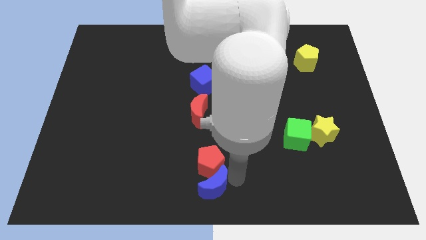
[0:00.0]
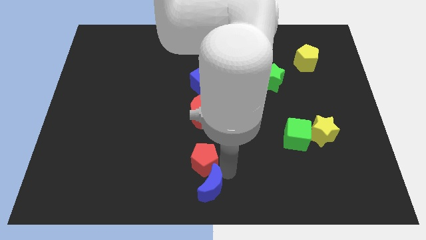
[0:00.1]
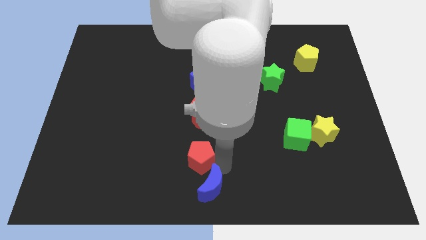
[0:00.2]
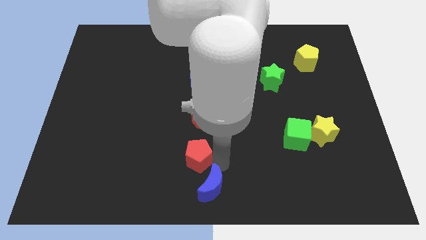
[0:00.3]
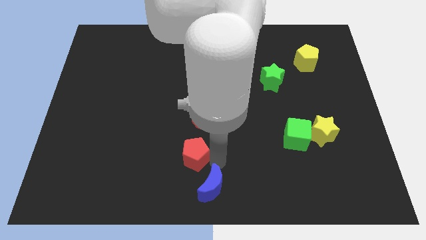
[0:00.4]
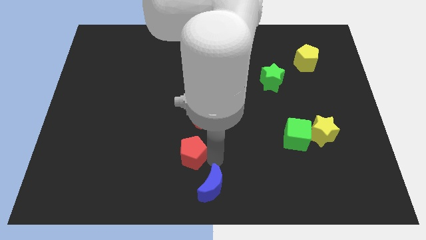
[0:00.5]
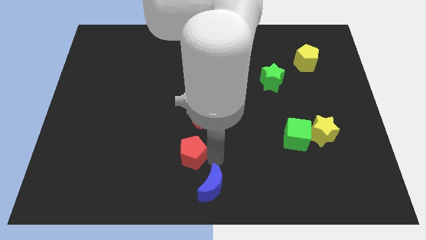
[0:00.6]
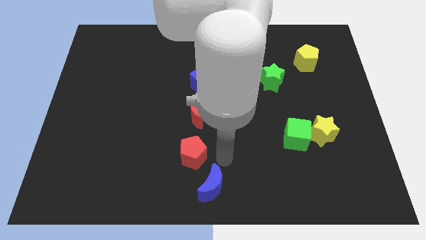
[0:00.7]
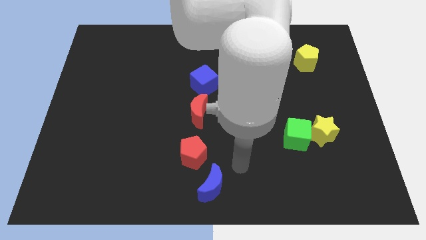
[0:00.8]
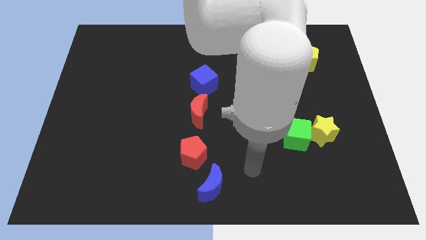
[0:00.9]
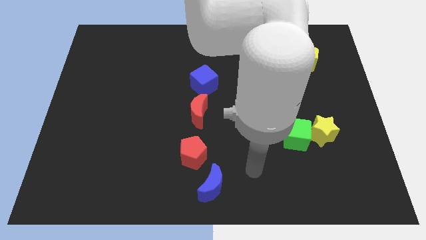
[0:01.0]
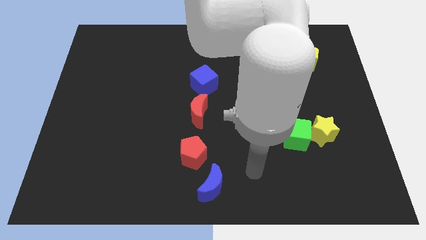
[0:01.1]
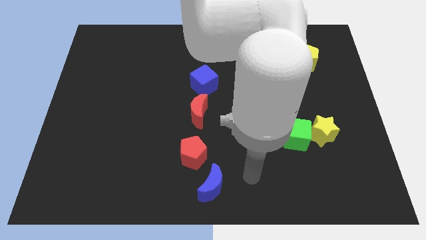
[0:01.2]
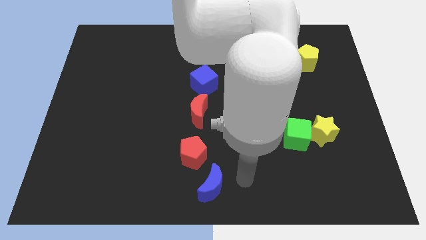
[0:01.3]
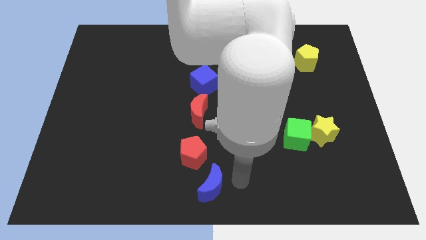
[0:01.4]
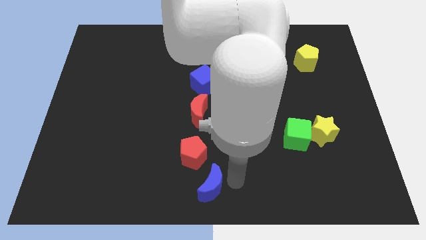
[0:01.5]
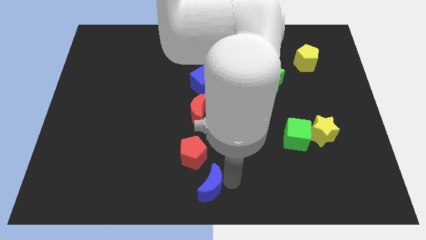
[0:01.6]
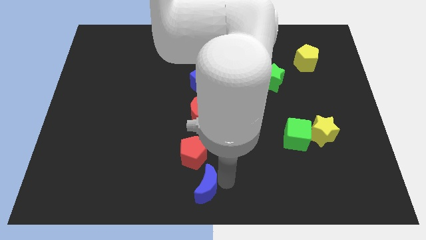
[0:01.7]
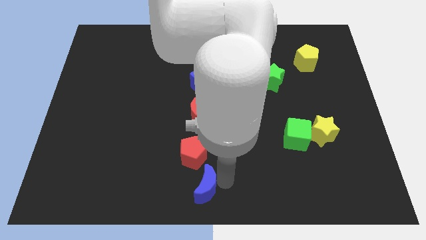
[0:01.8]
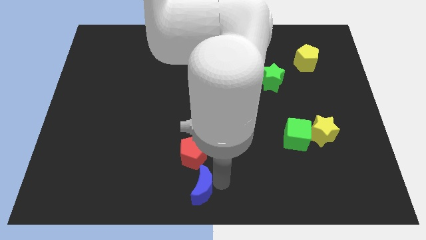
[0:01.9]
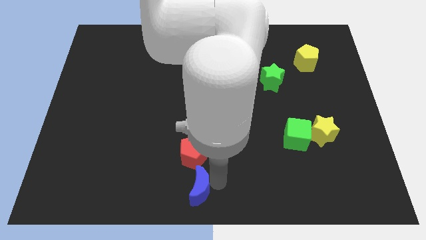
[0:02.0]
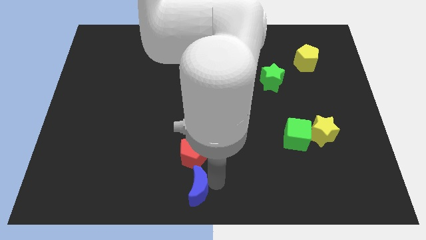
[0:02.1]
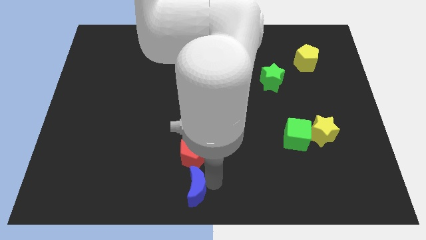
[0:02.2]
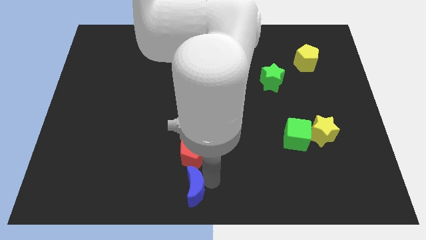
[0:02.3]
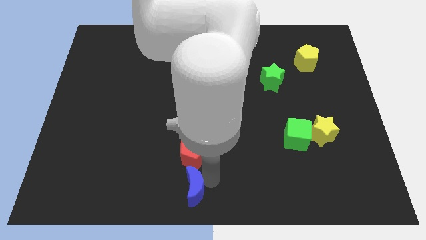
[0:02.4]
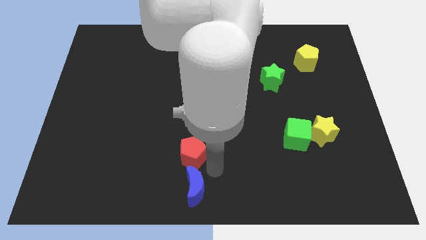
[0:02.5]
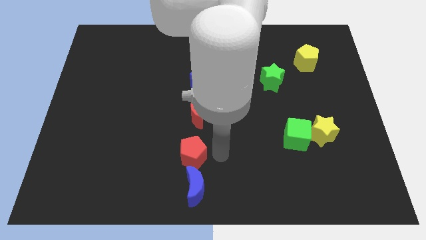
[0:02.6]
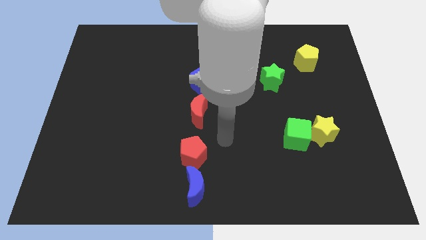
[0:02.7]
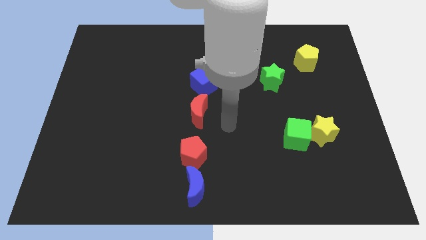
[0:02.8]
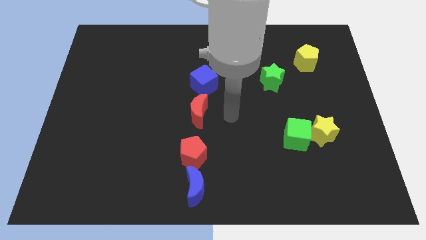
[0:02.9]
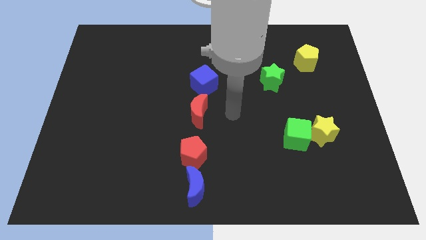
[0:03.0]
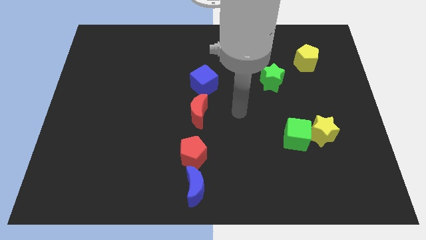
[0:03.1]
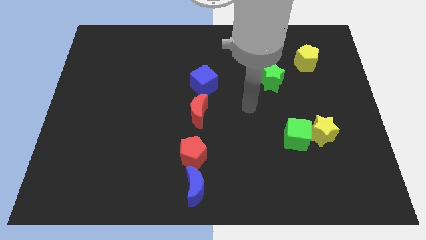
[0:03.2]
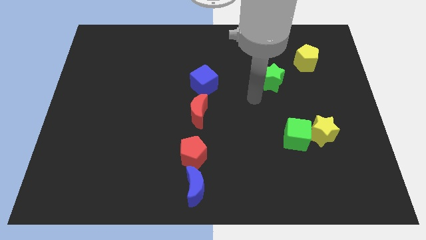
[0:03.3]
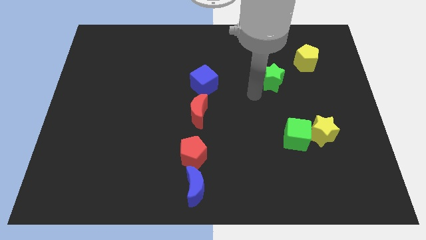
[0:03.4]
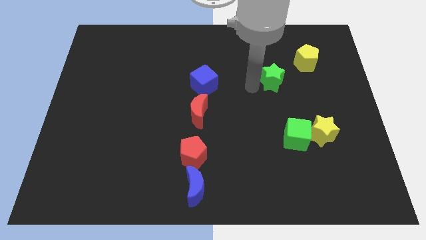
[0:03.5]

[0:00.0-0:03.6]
push the red pentagon towards the downside of the red crescent

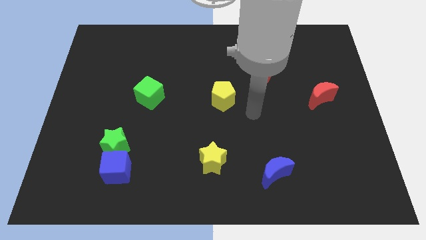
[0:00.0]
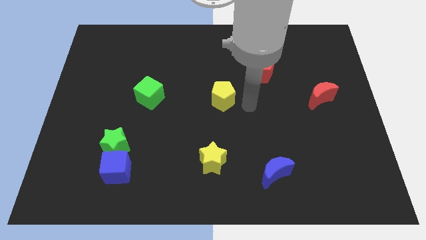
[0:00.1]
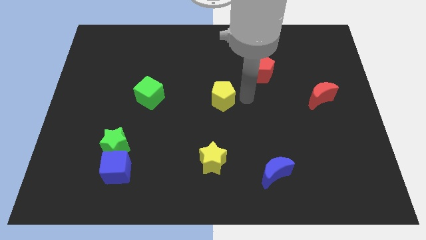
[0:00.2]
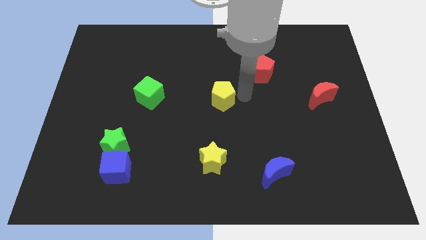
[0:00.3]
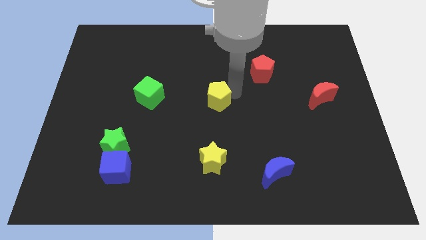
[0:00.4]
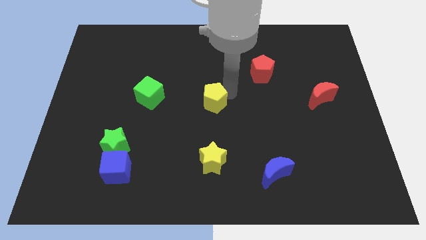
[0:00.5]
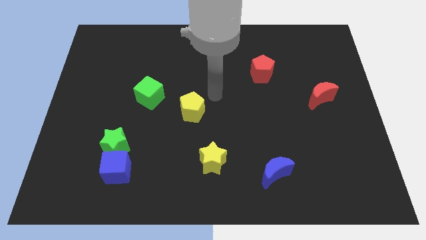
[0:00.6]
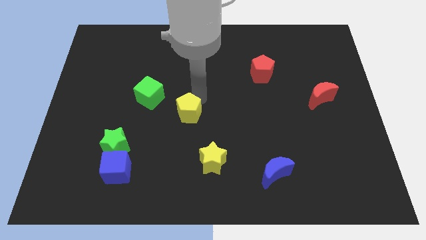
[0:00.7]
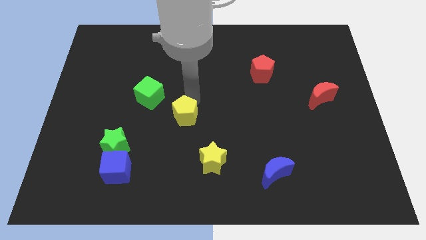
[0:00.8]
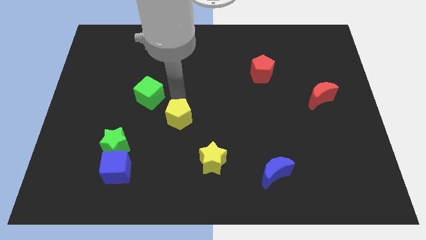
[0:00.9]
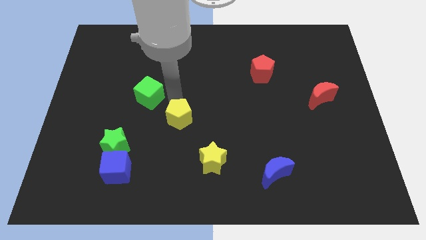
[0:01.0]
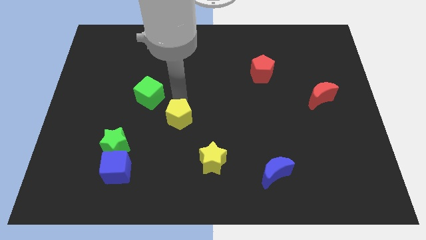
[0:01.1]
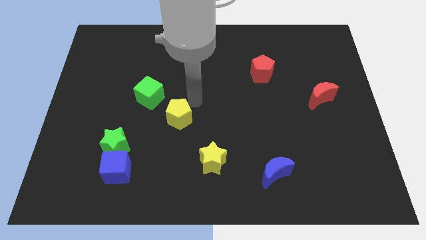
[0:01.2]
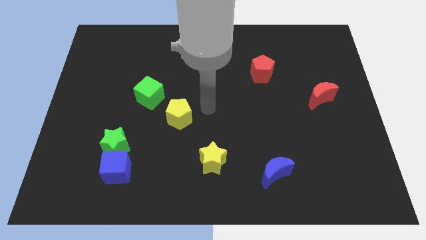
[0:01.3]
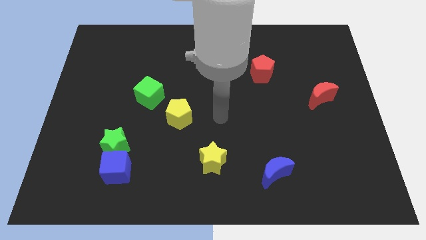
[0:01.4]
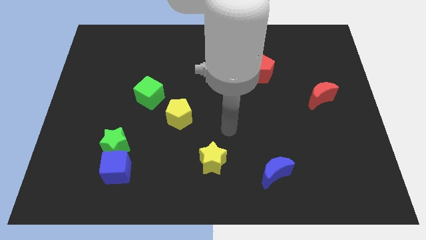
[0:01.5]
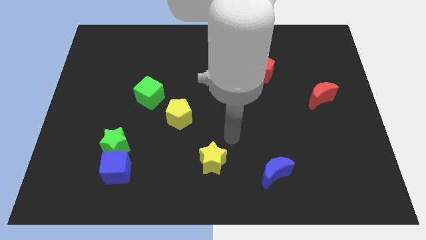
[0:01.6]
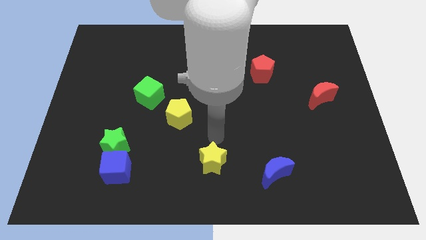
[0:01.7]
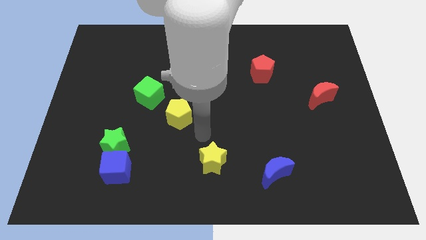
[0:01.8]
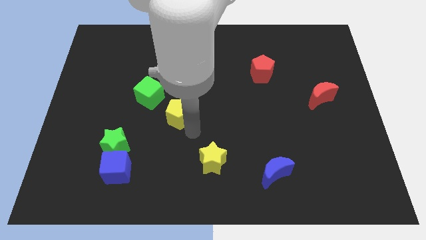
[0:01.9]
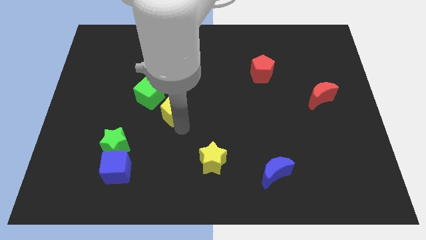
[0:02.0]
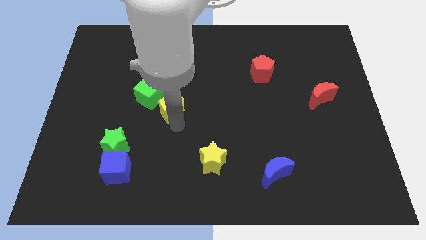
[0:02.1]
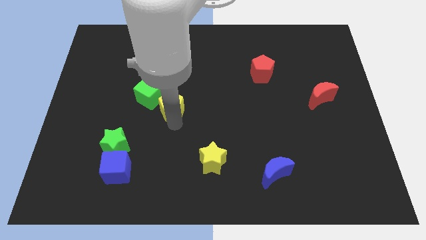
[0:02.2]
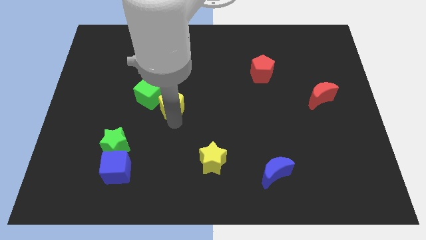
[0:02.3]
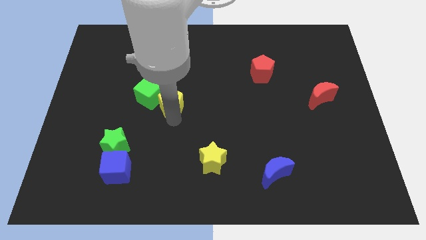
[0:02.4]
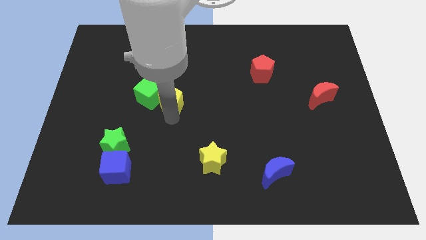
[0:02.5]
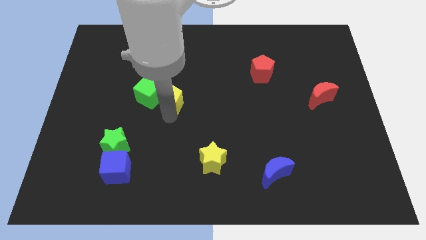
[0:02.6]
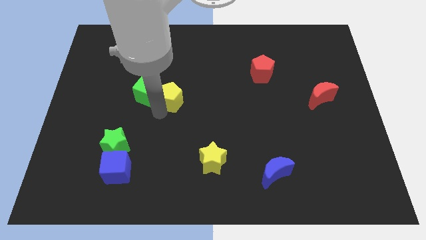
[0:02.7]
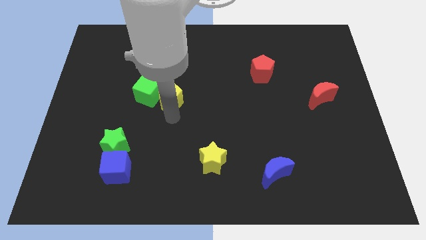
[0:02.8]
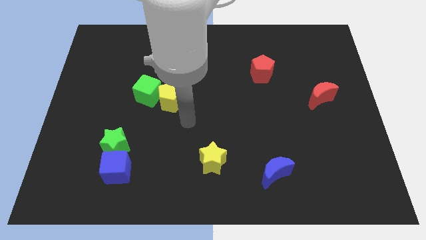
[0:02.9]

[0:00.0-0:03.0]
push the yellow pentagon into the green cube

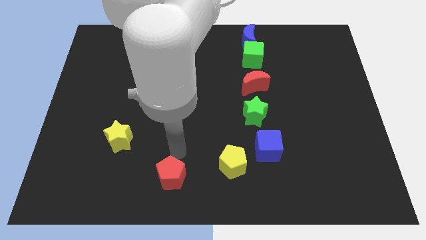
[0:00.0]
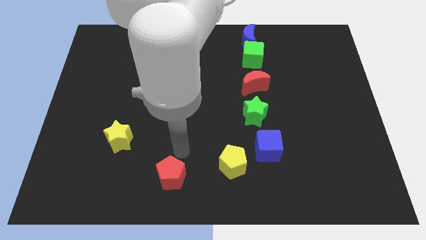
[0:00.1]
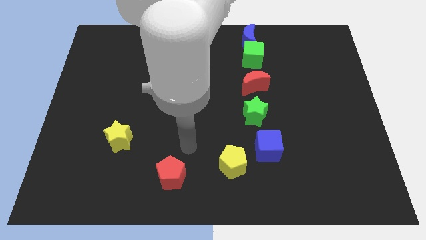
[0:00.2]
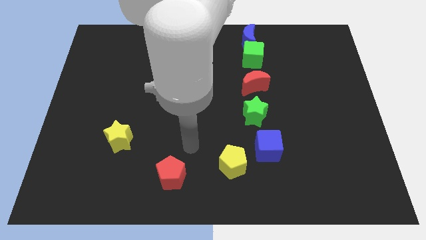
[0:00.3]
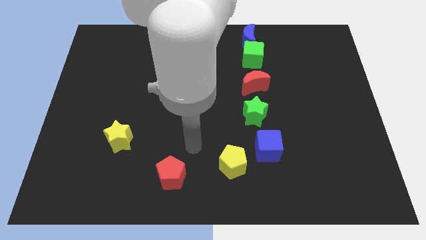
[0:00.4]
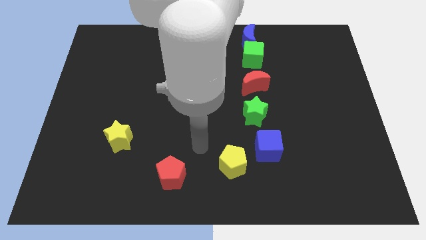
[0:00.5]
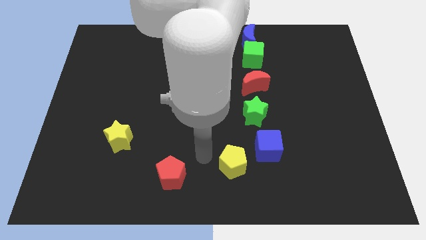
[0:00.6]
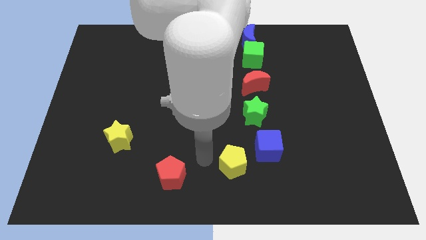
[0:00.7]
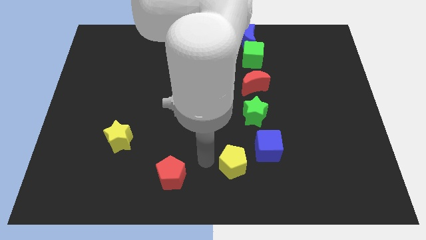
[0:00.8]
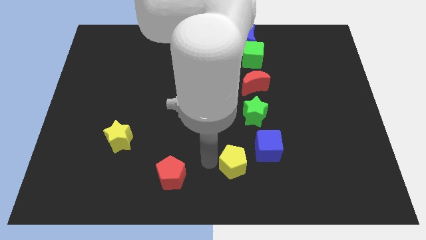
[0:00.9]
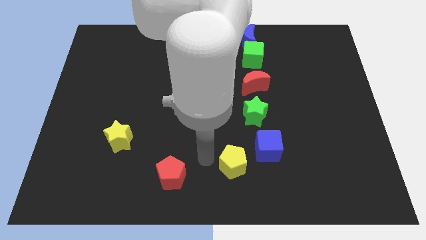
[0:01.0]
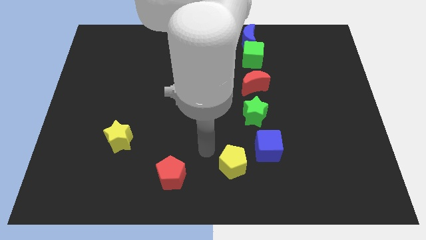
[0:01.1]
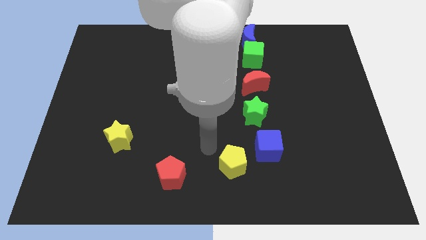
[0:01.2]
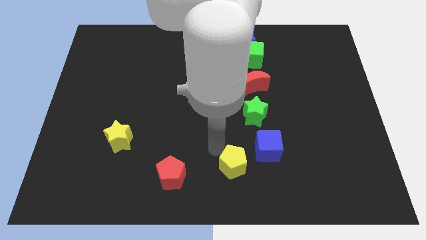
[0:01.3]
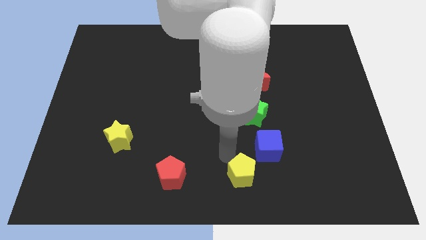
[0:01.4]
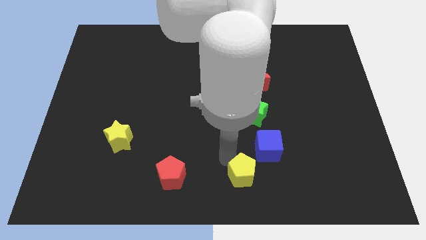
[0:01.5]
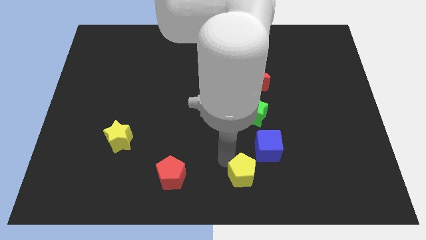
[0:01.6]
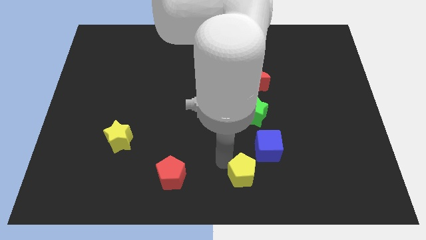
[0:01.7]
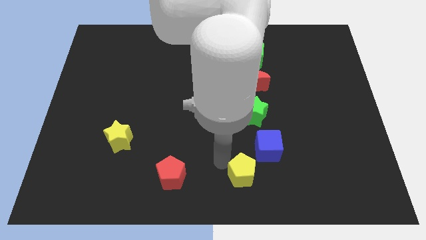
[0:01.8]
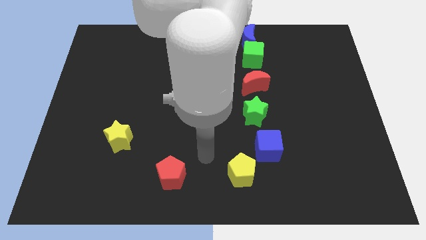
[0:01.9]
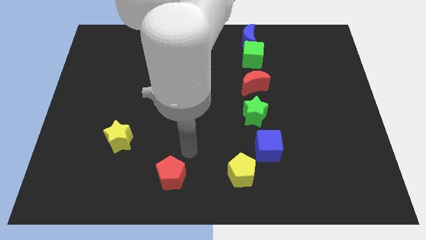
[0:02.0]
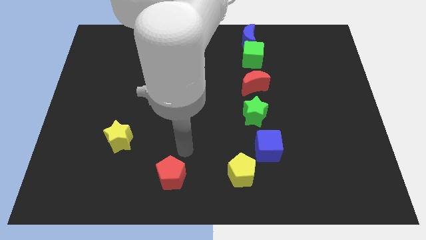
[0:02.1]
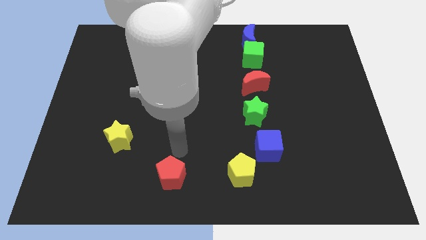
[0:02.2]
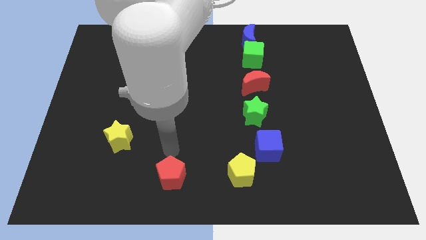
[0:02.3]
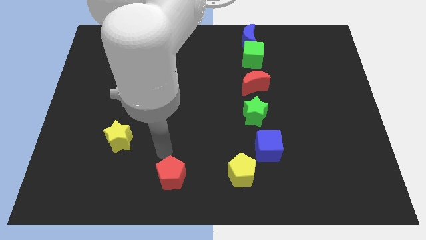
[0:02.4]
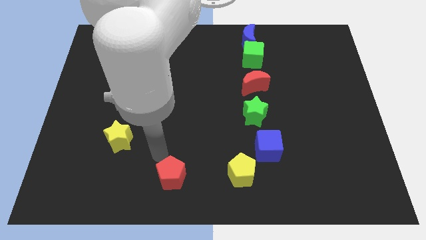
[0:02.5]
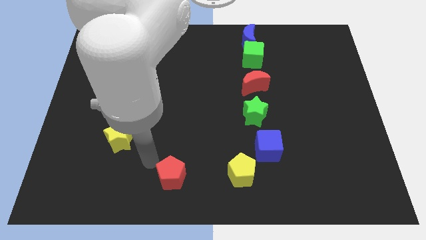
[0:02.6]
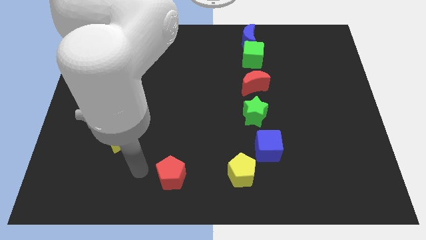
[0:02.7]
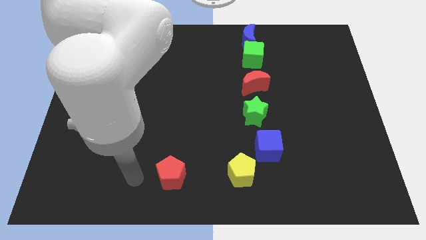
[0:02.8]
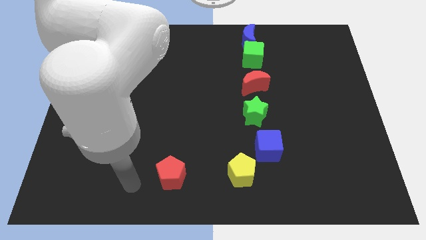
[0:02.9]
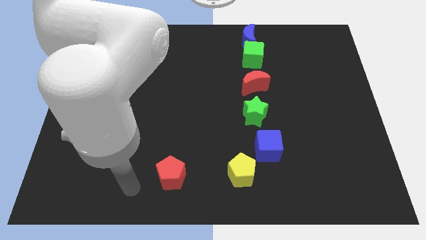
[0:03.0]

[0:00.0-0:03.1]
move the yellow pentagon slightly to the bottom
